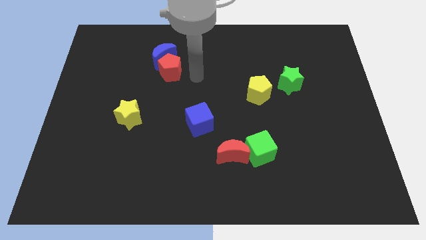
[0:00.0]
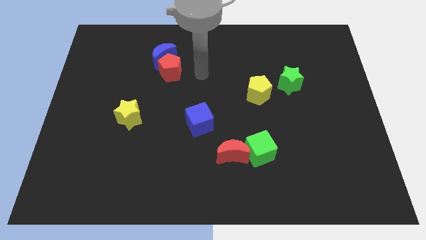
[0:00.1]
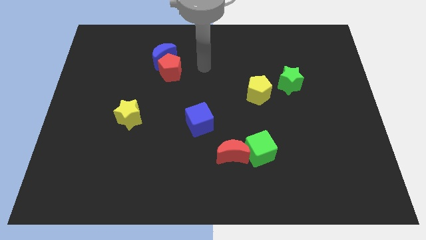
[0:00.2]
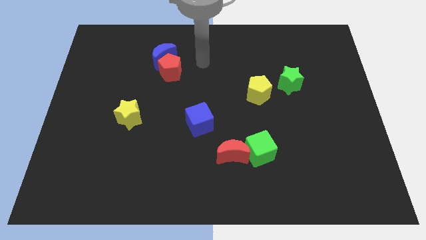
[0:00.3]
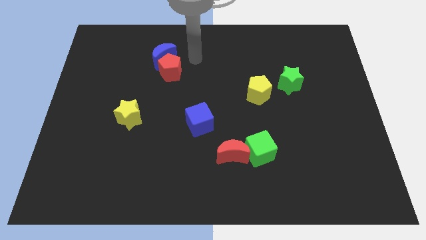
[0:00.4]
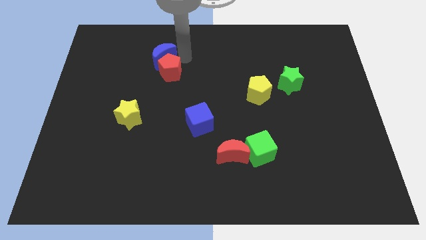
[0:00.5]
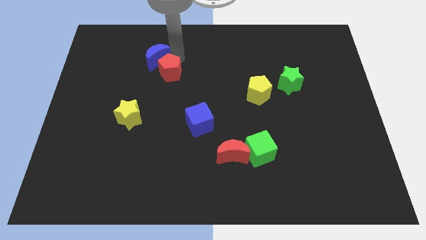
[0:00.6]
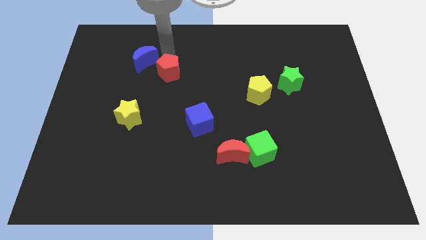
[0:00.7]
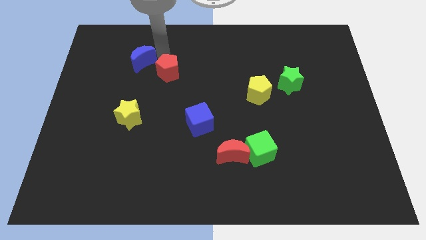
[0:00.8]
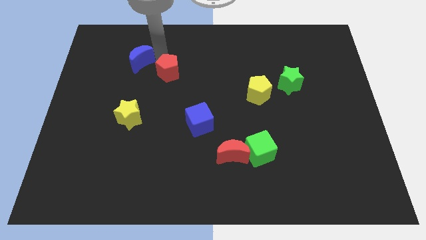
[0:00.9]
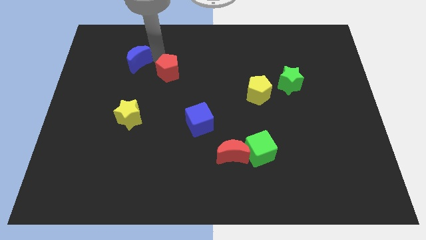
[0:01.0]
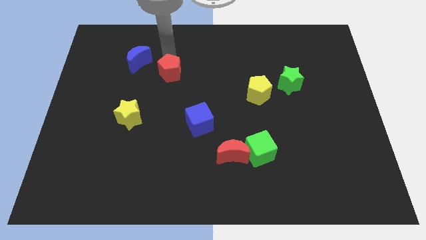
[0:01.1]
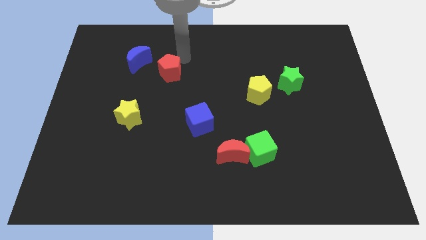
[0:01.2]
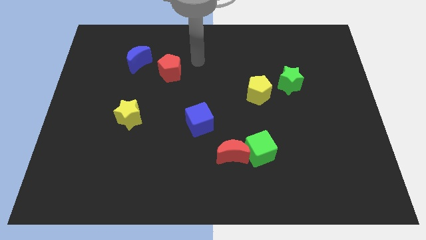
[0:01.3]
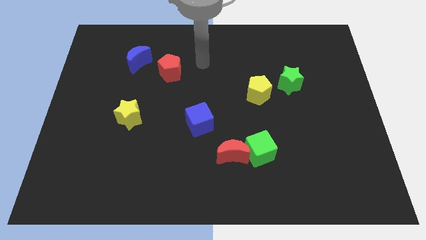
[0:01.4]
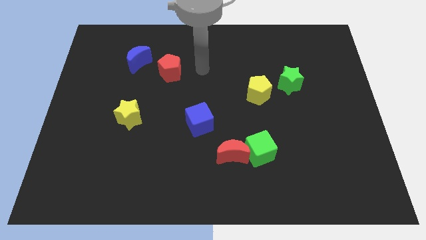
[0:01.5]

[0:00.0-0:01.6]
separate the blue crescent from red pentagon

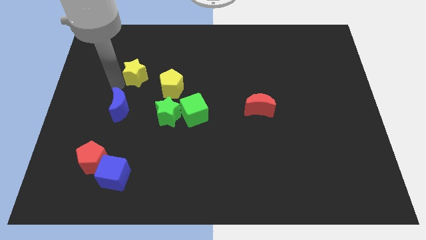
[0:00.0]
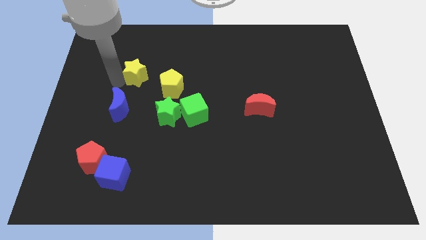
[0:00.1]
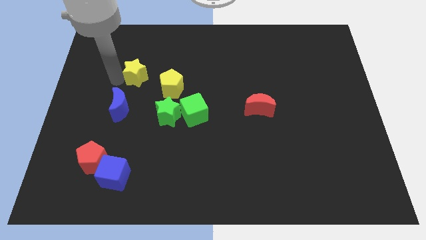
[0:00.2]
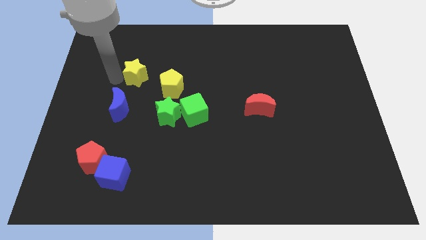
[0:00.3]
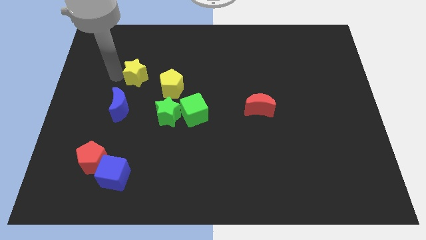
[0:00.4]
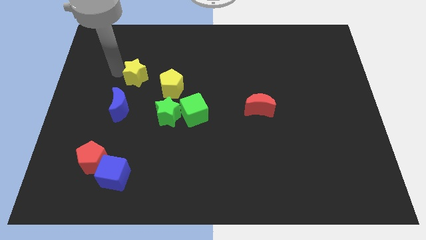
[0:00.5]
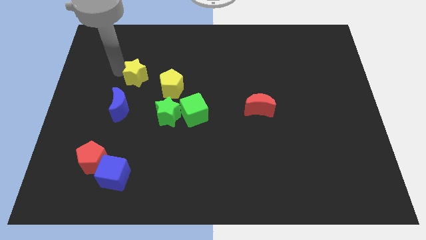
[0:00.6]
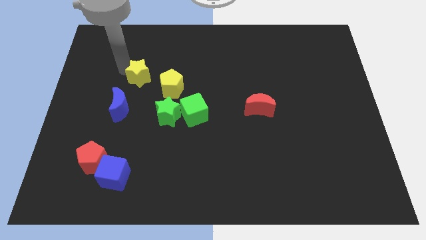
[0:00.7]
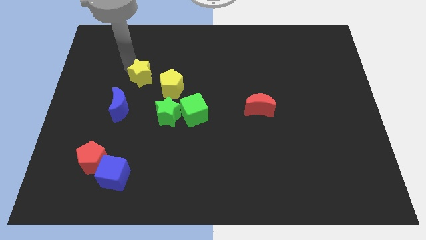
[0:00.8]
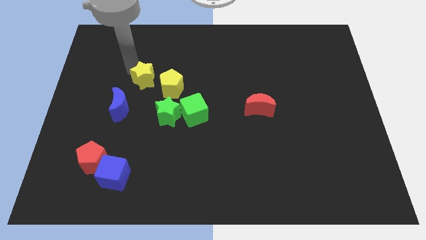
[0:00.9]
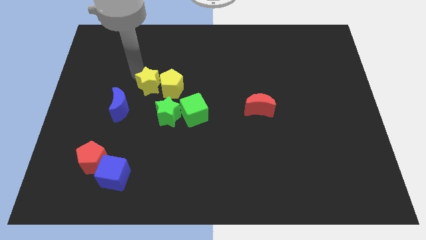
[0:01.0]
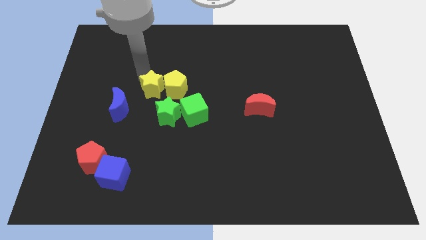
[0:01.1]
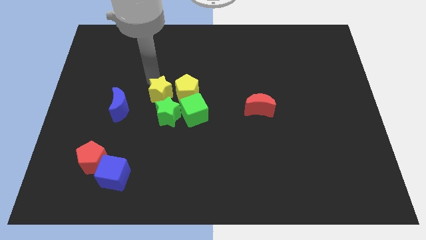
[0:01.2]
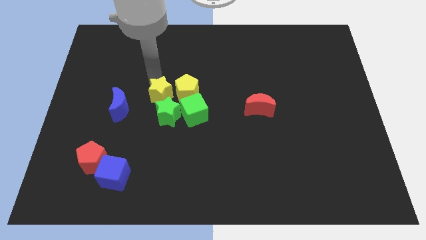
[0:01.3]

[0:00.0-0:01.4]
push the yellow star into the yellow pentagon

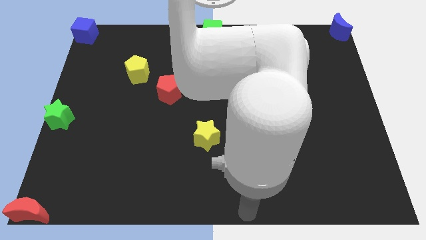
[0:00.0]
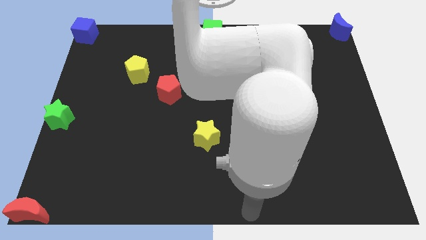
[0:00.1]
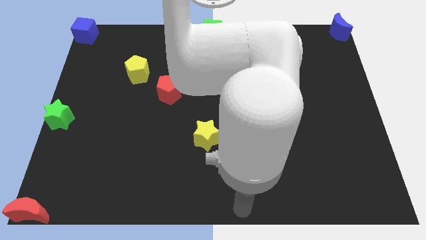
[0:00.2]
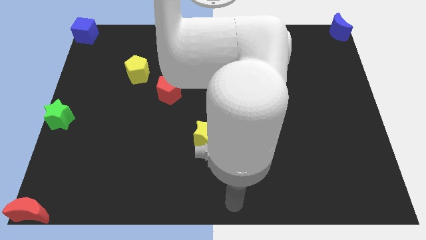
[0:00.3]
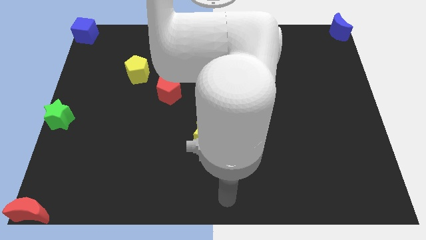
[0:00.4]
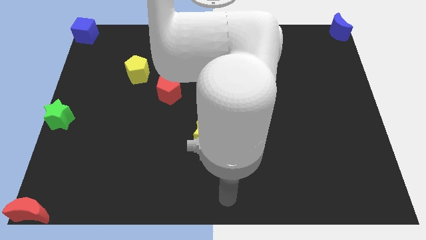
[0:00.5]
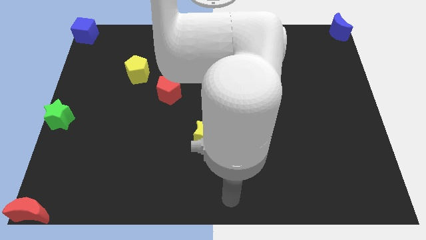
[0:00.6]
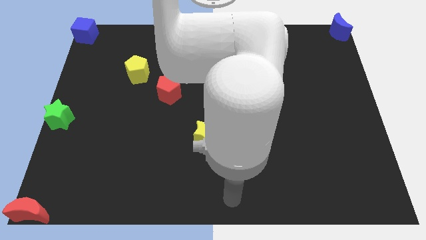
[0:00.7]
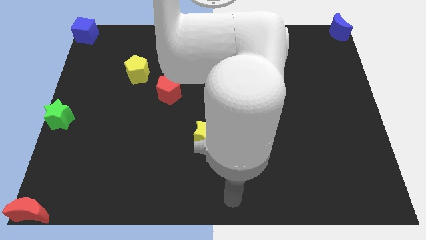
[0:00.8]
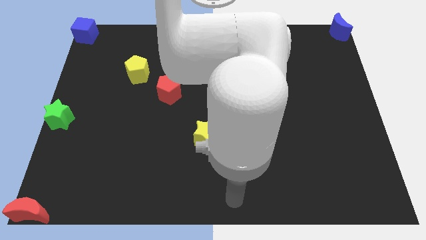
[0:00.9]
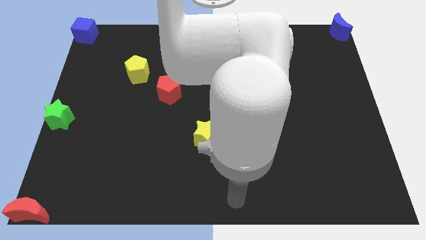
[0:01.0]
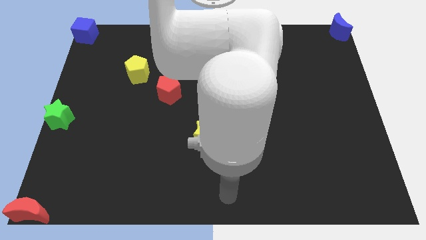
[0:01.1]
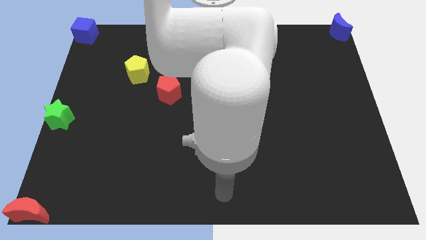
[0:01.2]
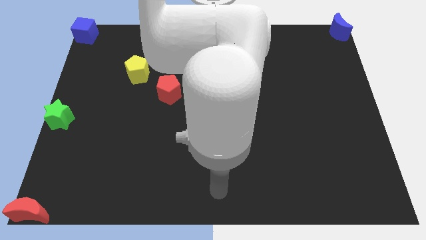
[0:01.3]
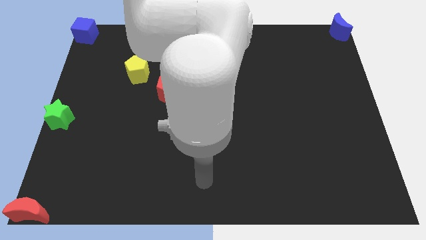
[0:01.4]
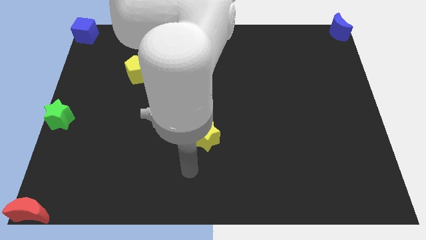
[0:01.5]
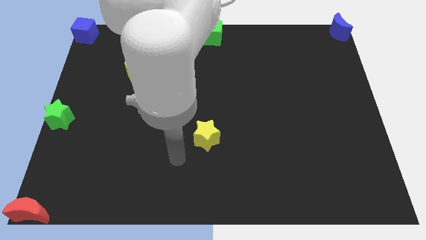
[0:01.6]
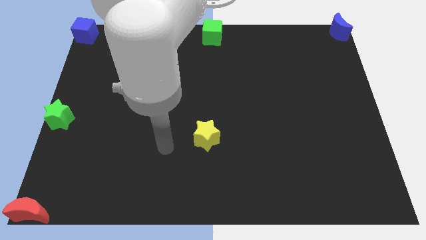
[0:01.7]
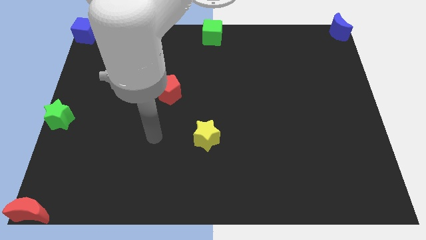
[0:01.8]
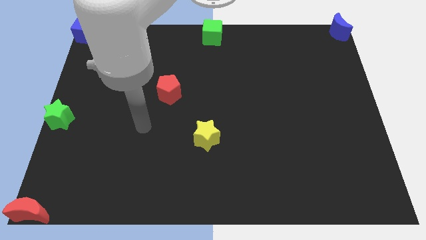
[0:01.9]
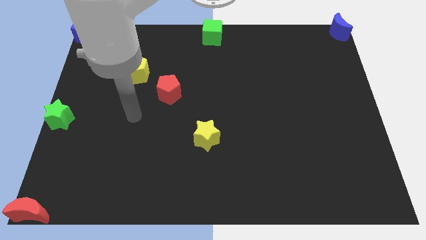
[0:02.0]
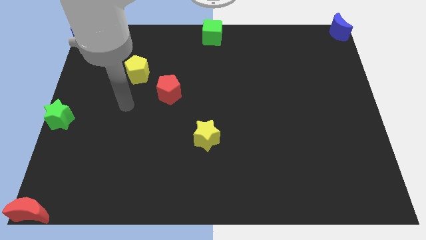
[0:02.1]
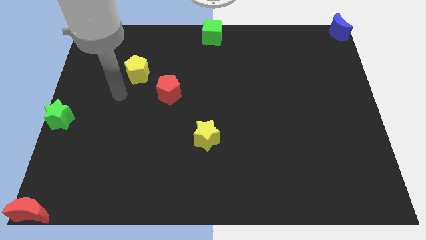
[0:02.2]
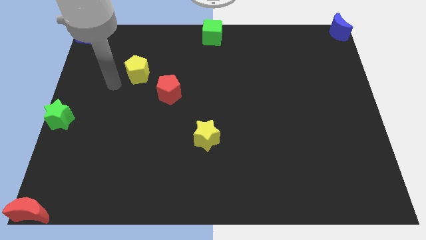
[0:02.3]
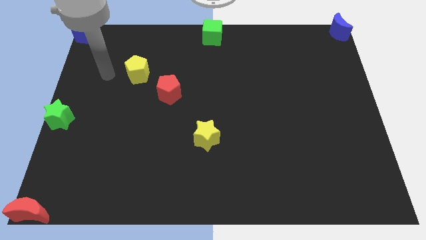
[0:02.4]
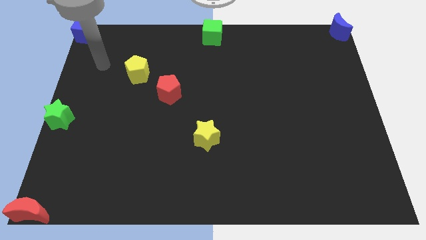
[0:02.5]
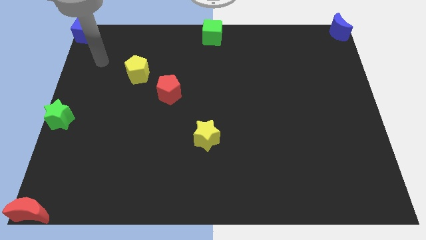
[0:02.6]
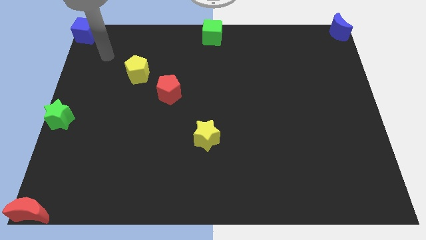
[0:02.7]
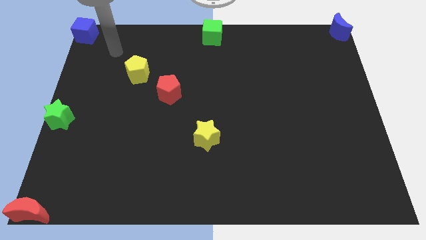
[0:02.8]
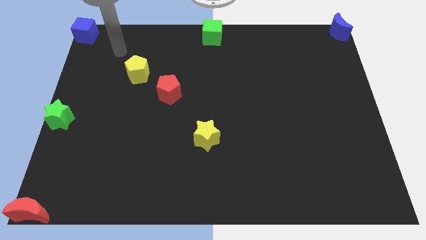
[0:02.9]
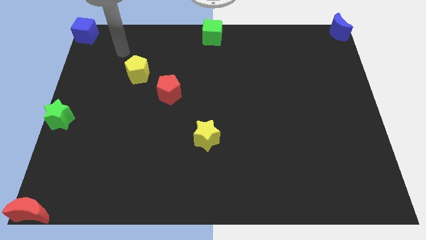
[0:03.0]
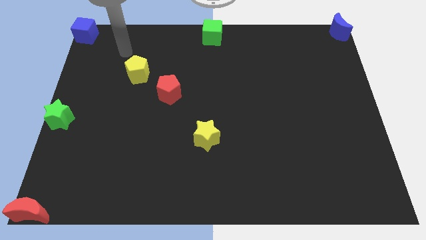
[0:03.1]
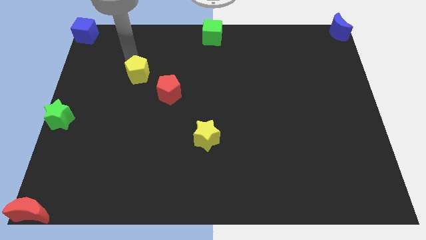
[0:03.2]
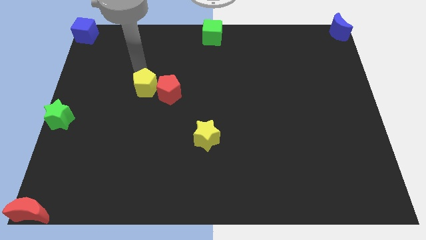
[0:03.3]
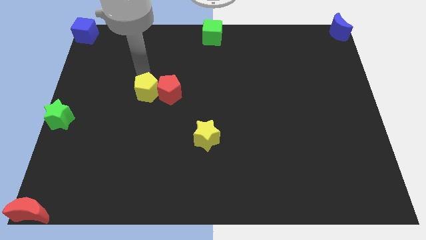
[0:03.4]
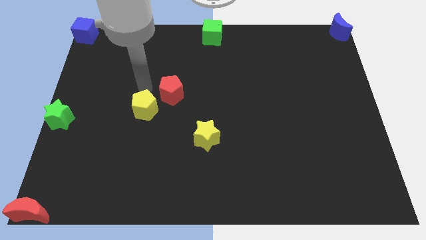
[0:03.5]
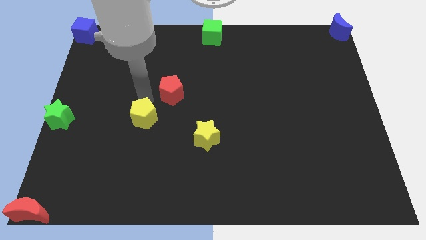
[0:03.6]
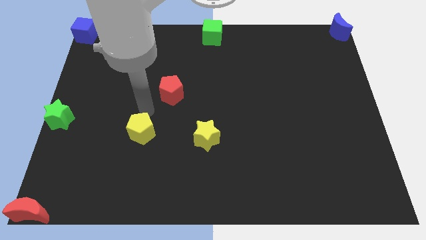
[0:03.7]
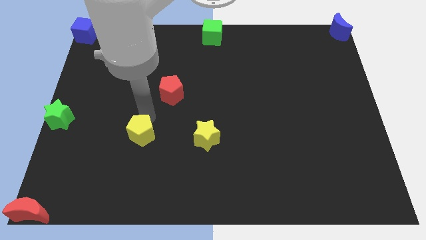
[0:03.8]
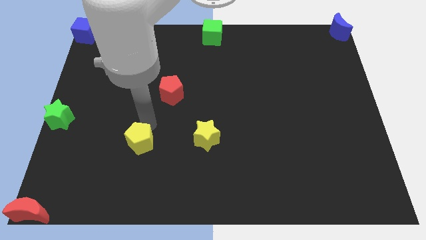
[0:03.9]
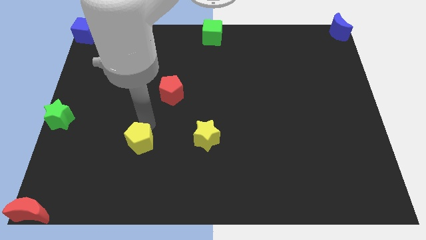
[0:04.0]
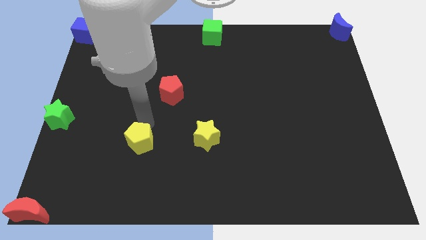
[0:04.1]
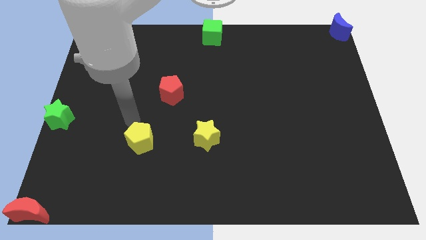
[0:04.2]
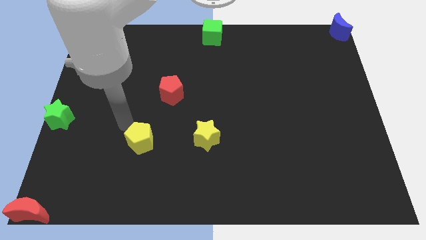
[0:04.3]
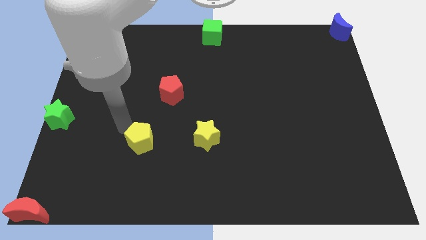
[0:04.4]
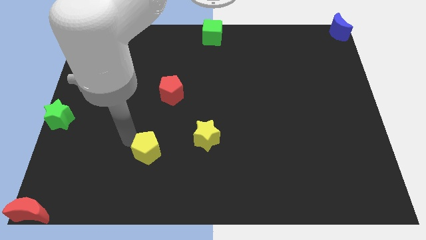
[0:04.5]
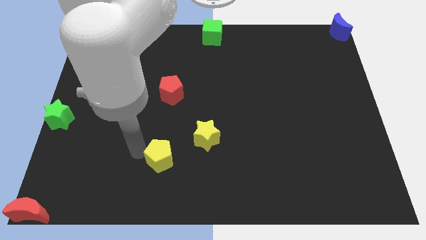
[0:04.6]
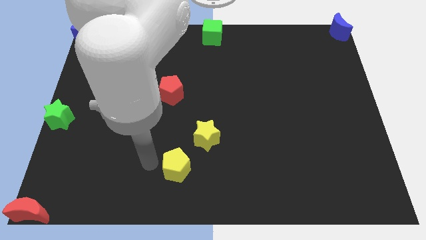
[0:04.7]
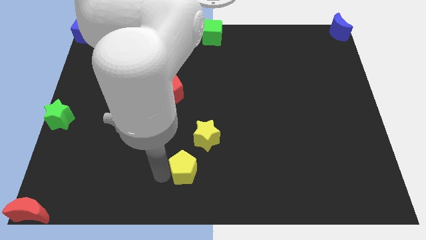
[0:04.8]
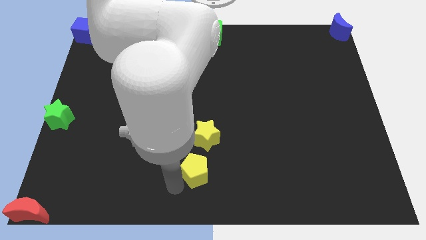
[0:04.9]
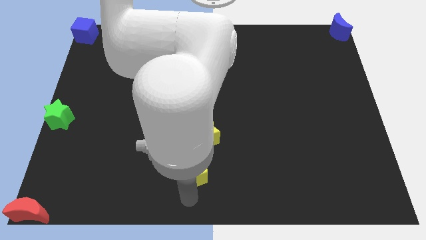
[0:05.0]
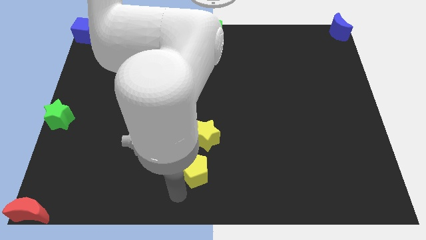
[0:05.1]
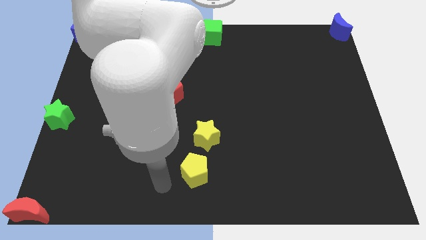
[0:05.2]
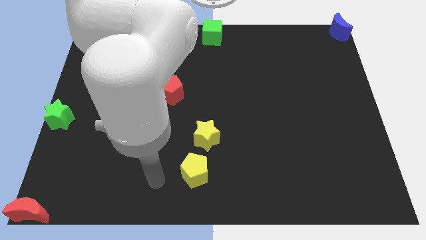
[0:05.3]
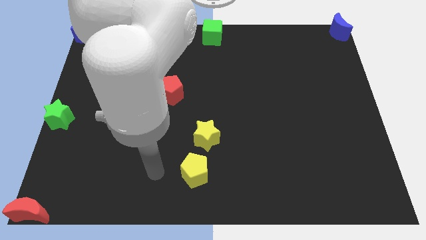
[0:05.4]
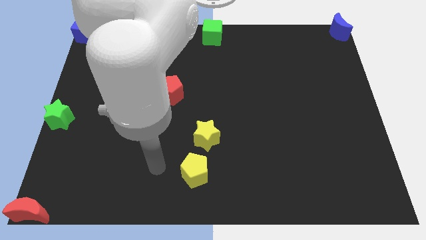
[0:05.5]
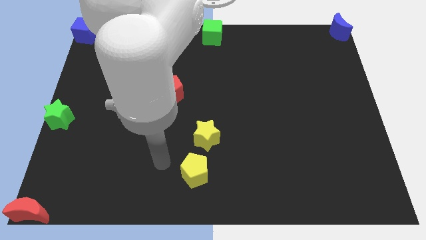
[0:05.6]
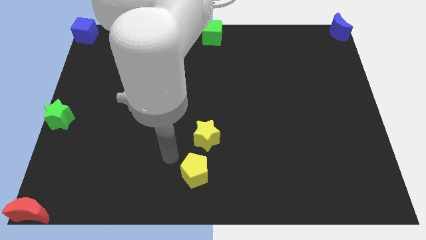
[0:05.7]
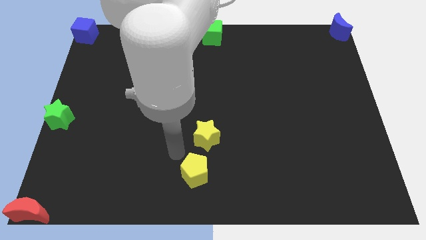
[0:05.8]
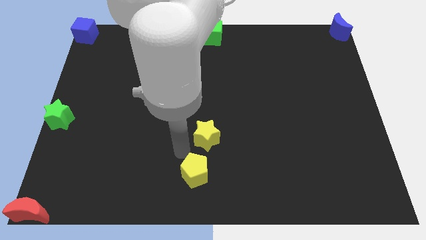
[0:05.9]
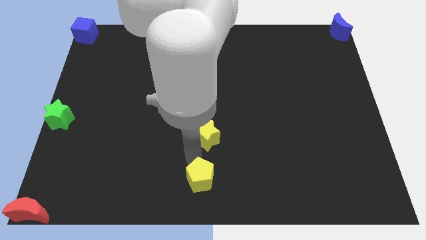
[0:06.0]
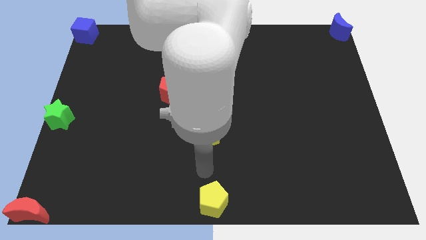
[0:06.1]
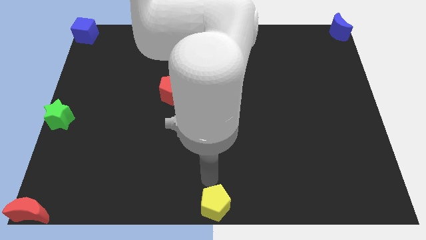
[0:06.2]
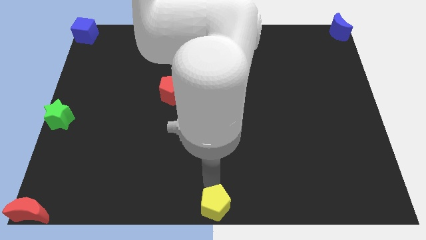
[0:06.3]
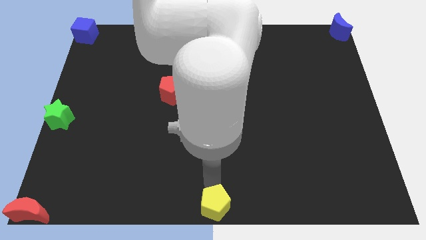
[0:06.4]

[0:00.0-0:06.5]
push the yellow pentagon to the bottom center
